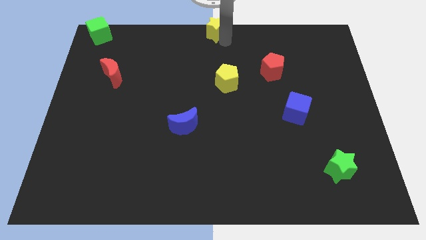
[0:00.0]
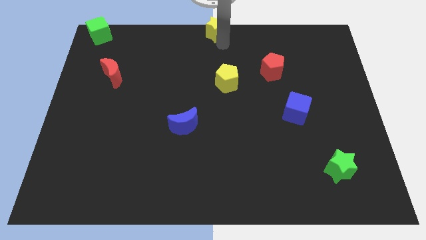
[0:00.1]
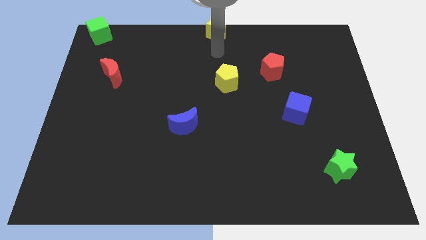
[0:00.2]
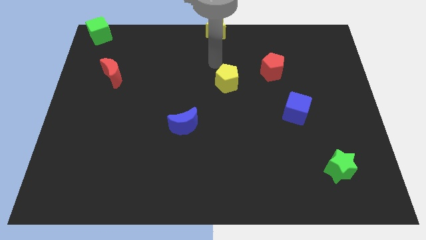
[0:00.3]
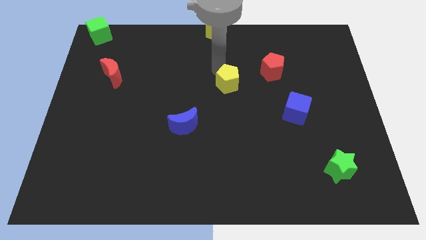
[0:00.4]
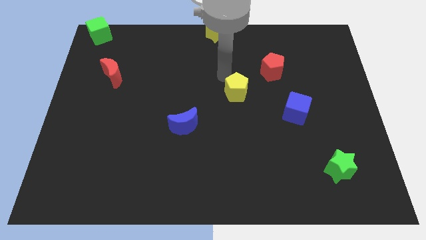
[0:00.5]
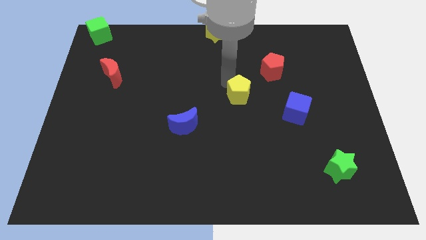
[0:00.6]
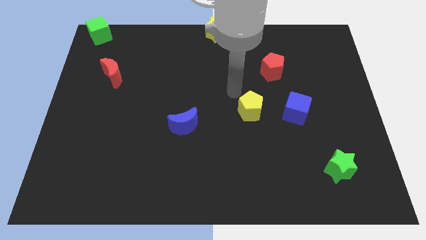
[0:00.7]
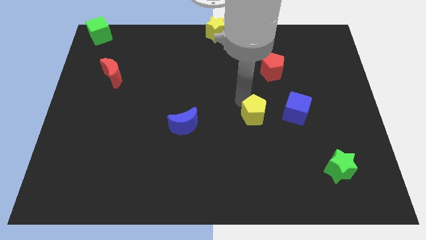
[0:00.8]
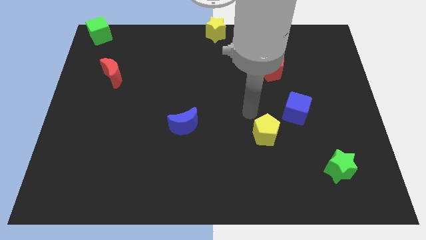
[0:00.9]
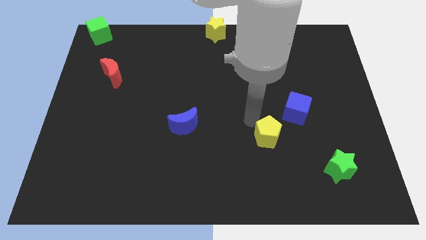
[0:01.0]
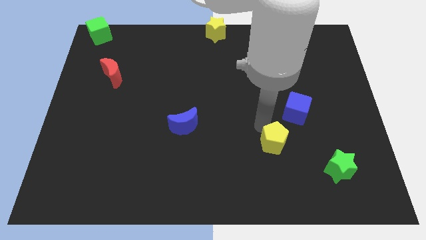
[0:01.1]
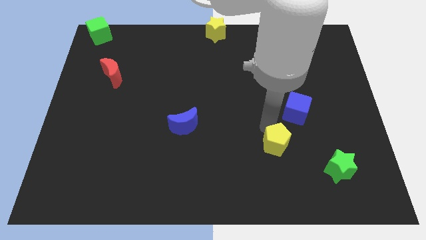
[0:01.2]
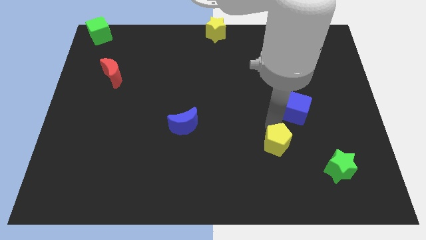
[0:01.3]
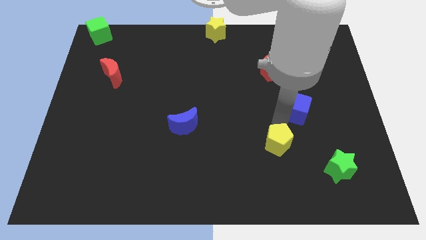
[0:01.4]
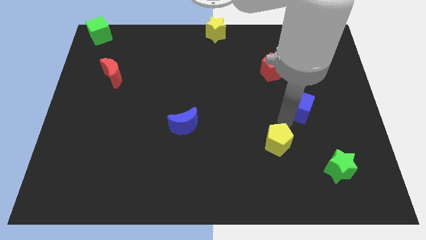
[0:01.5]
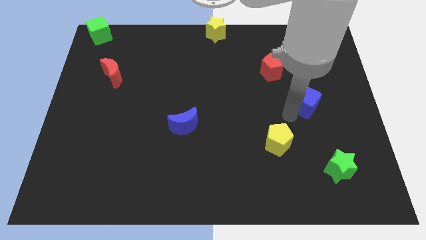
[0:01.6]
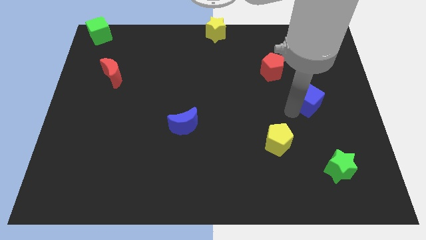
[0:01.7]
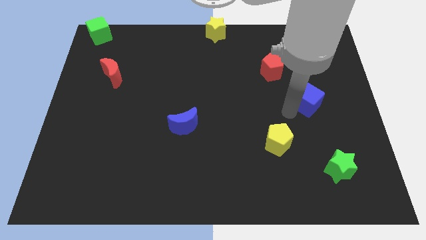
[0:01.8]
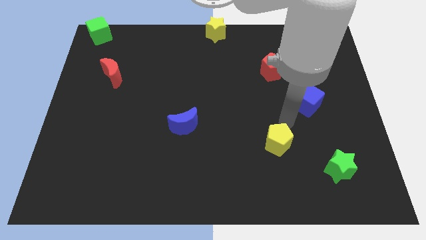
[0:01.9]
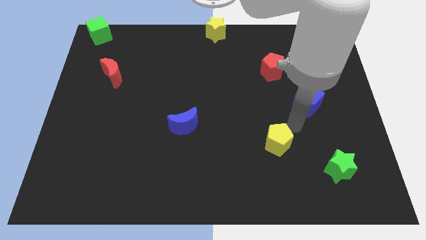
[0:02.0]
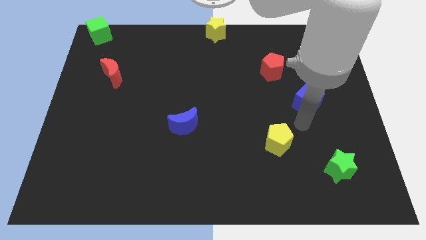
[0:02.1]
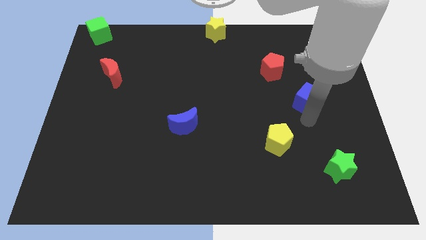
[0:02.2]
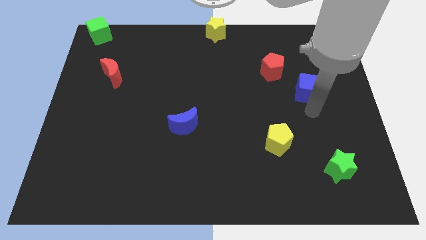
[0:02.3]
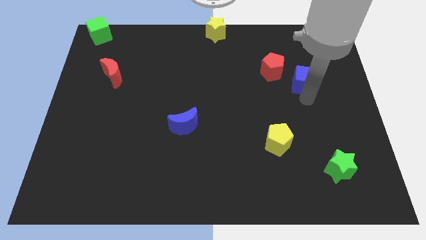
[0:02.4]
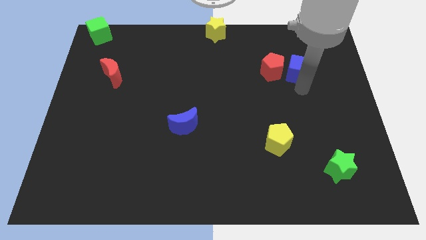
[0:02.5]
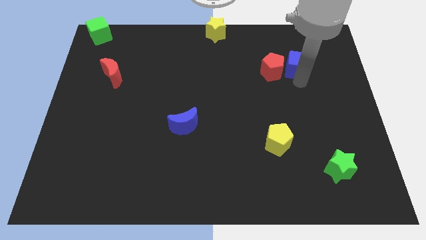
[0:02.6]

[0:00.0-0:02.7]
place blue cube right red pentagon

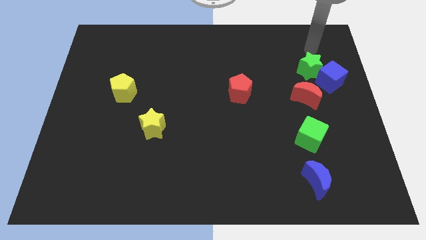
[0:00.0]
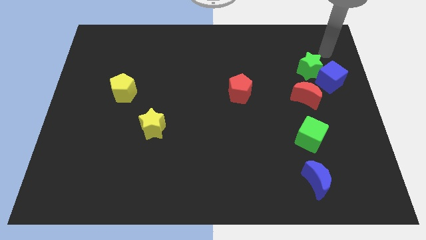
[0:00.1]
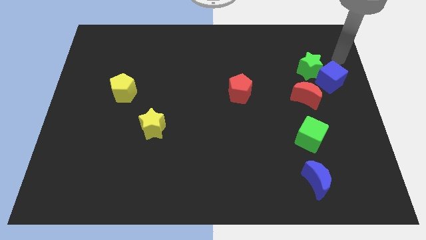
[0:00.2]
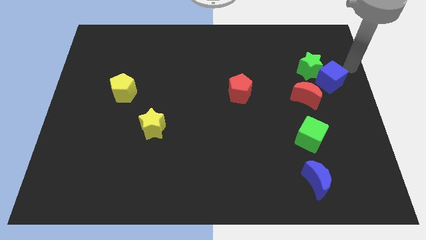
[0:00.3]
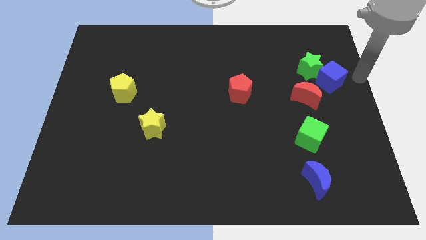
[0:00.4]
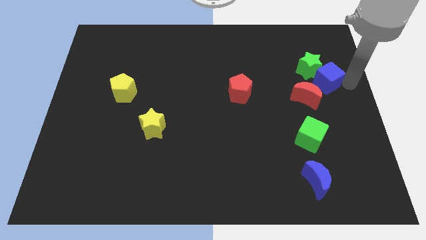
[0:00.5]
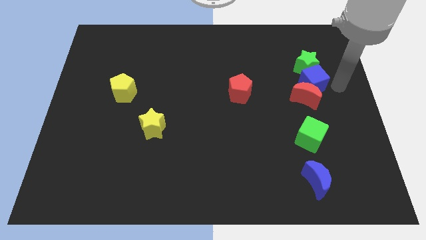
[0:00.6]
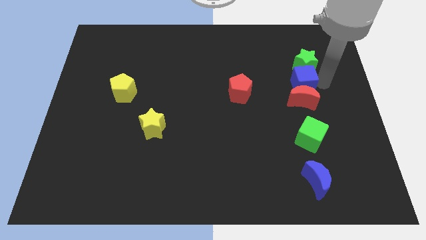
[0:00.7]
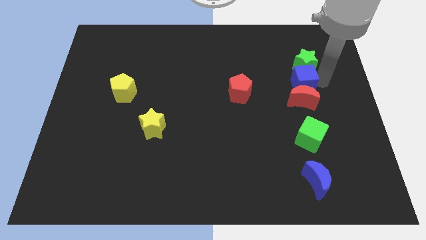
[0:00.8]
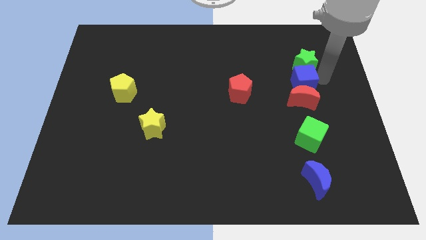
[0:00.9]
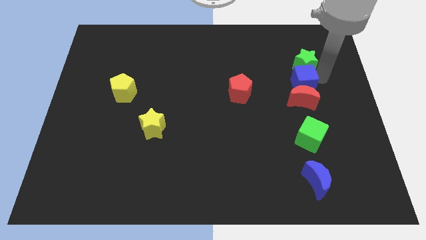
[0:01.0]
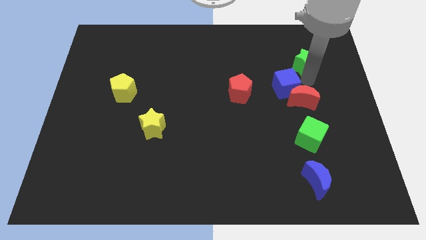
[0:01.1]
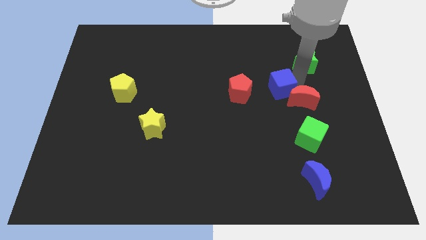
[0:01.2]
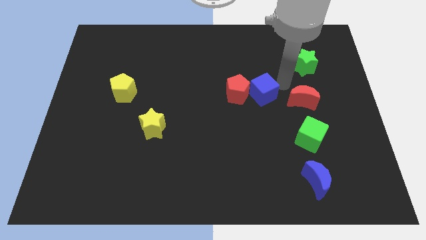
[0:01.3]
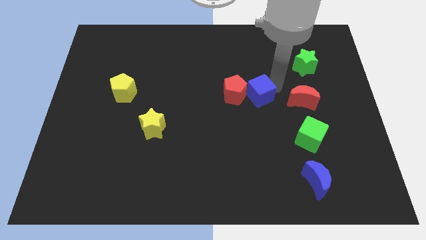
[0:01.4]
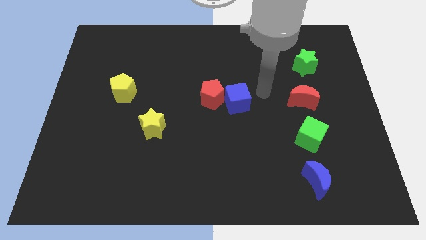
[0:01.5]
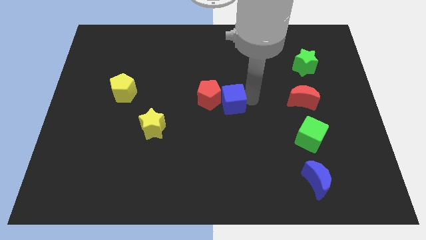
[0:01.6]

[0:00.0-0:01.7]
push the blue cube into the red pentagon

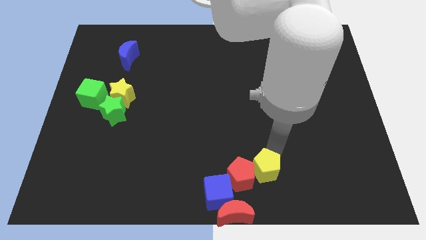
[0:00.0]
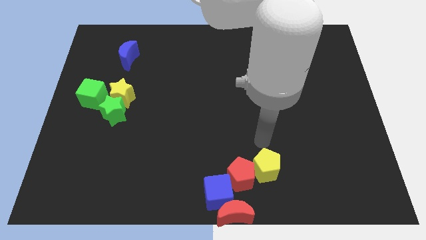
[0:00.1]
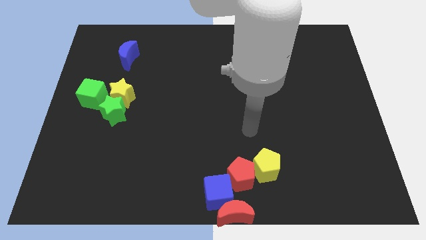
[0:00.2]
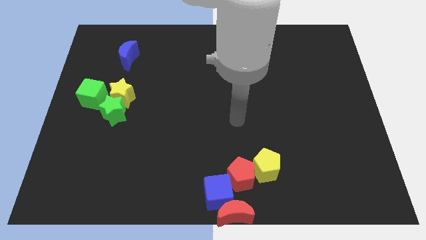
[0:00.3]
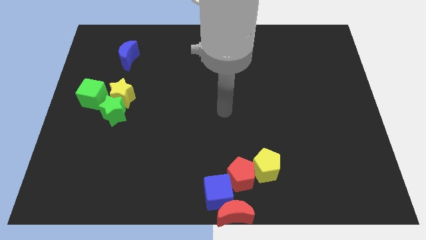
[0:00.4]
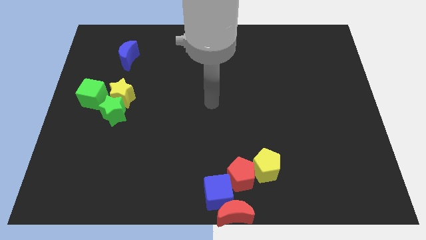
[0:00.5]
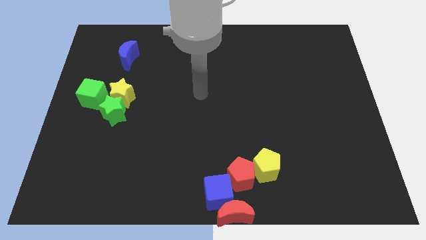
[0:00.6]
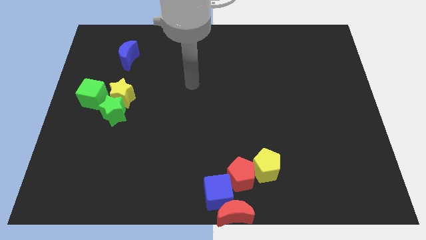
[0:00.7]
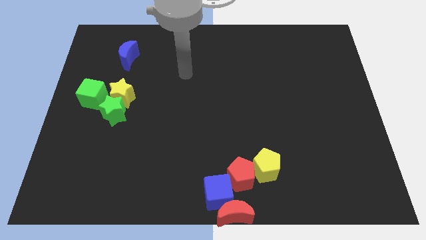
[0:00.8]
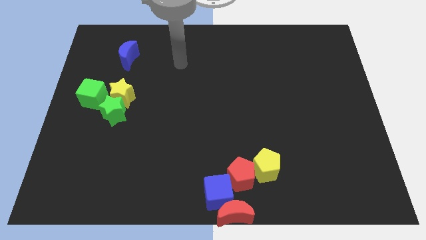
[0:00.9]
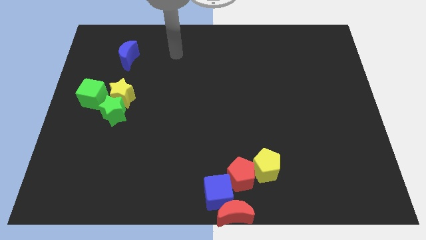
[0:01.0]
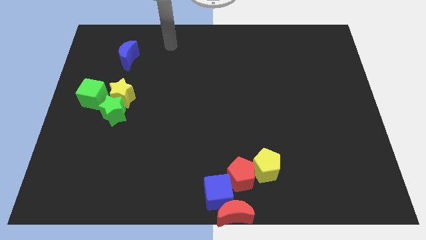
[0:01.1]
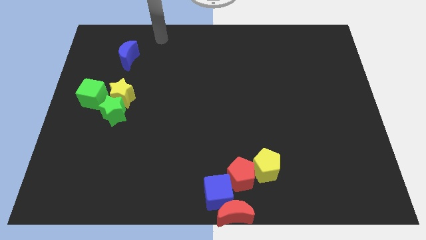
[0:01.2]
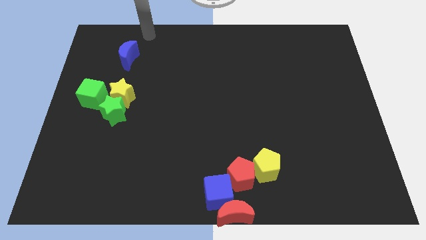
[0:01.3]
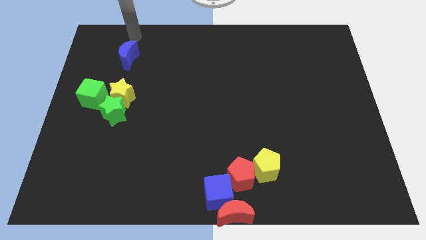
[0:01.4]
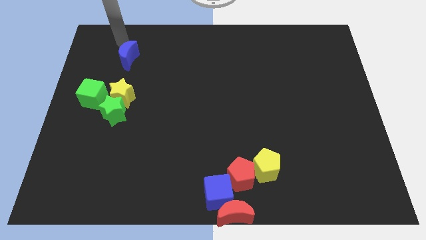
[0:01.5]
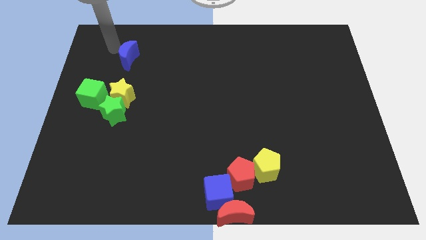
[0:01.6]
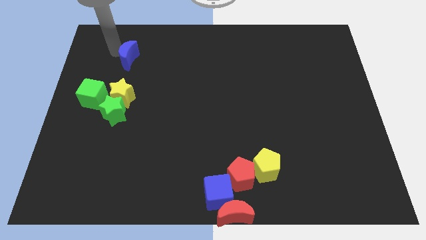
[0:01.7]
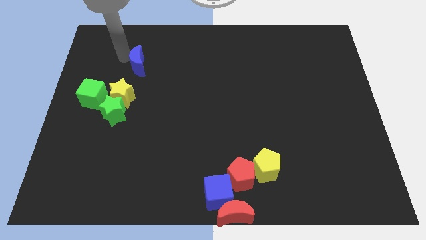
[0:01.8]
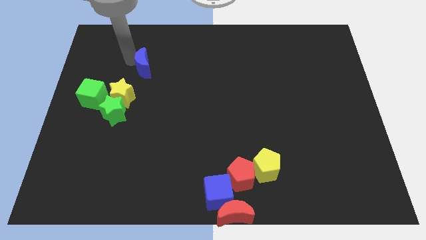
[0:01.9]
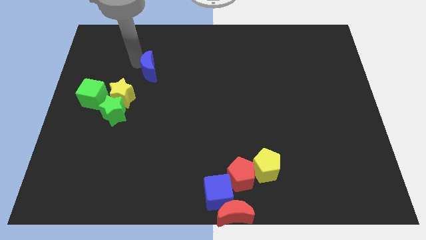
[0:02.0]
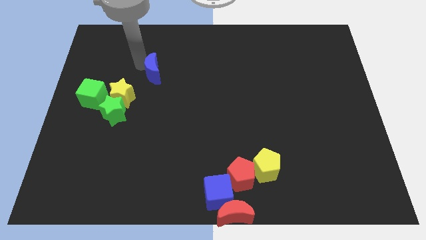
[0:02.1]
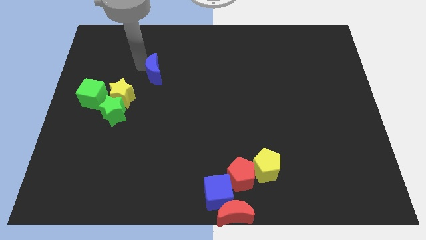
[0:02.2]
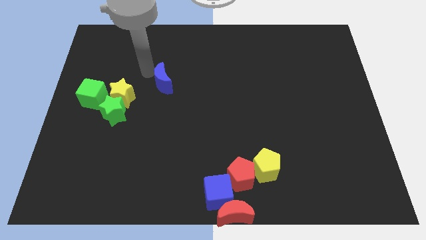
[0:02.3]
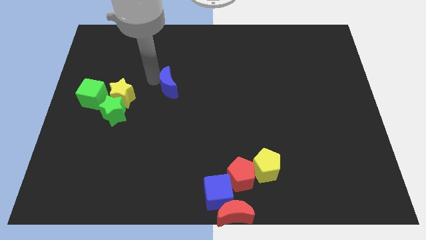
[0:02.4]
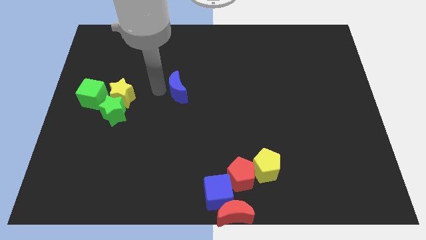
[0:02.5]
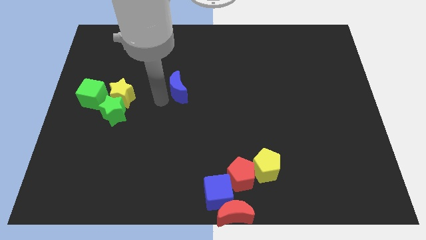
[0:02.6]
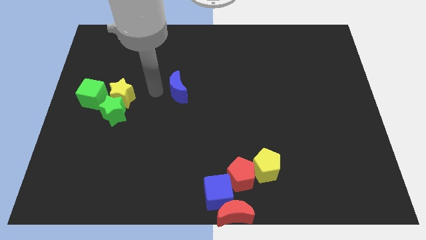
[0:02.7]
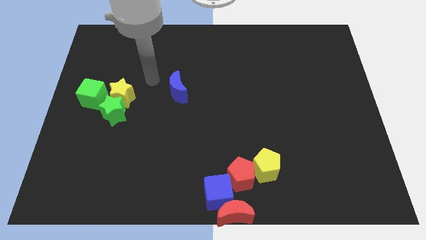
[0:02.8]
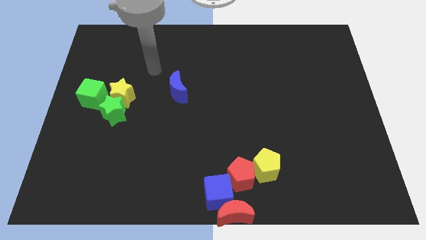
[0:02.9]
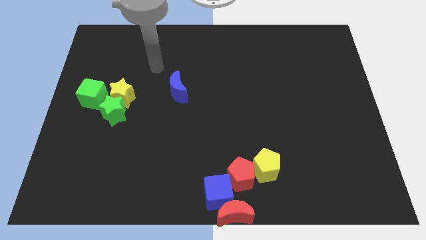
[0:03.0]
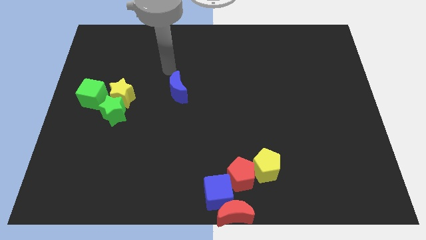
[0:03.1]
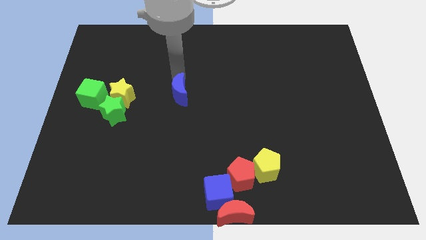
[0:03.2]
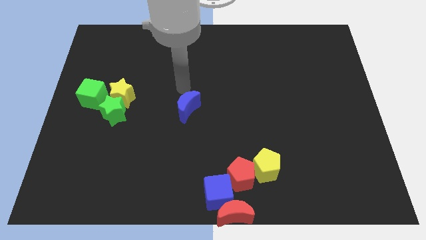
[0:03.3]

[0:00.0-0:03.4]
place the blue moon parallel to the yellow star

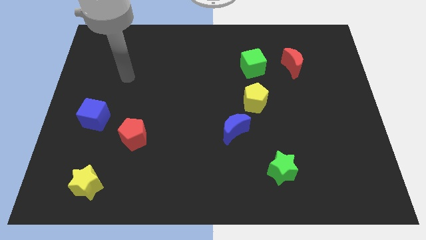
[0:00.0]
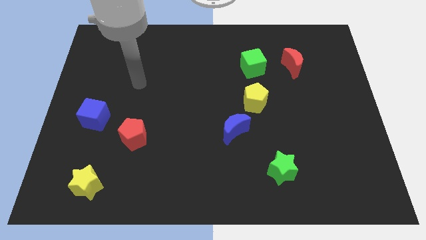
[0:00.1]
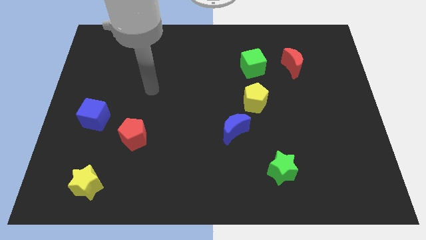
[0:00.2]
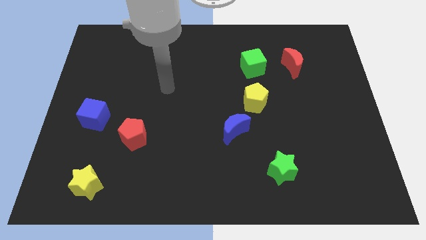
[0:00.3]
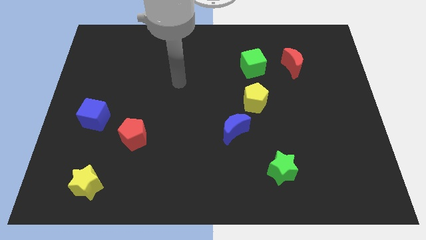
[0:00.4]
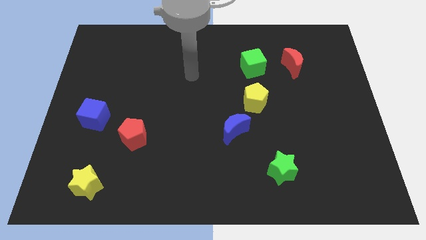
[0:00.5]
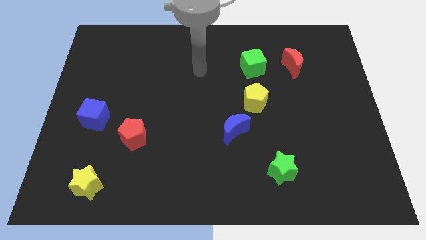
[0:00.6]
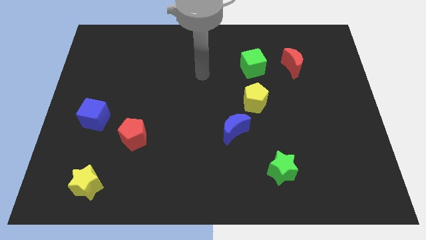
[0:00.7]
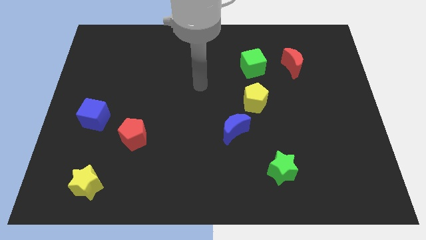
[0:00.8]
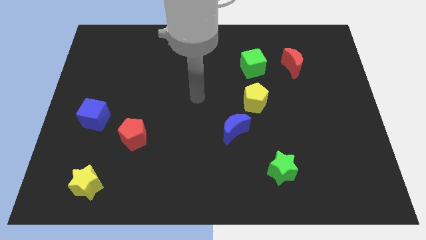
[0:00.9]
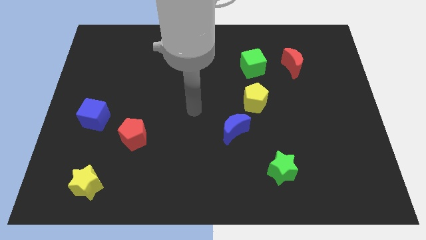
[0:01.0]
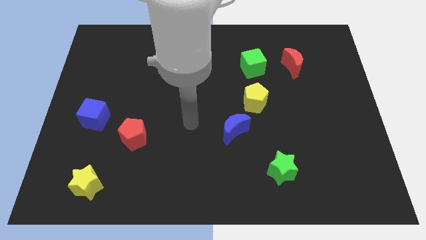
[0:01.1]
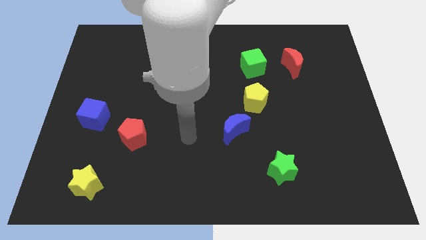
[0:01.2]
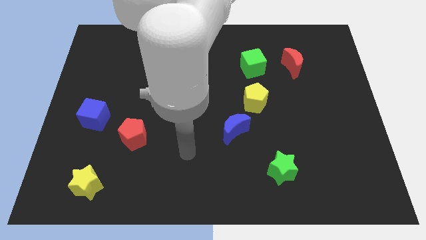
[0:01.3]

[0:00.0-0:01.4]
move your arm to the left of the blue crescent
